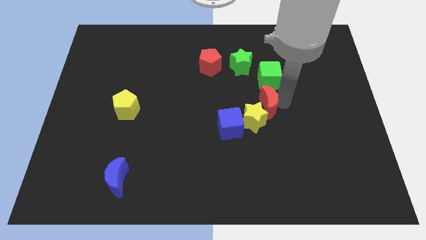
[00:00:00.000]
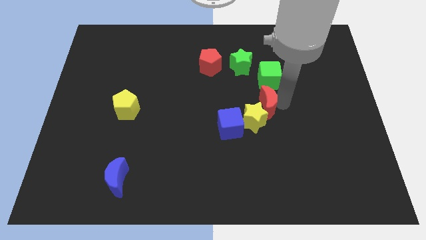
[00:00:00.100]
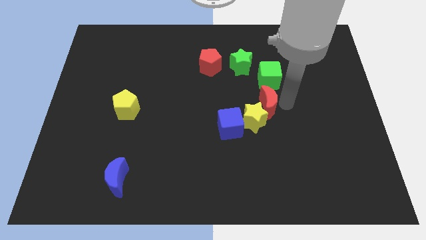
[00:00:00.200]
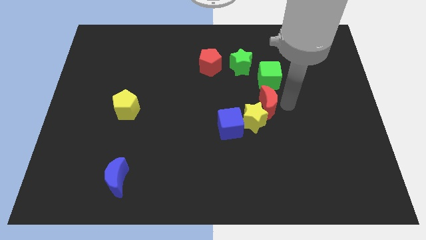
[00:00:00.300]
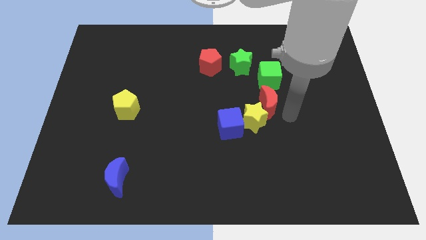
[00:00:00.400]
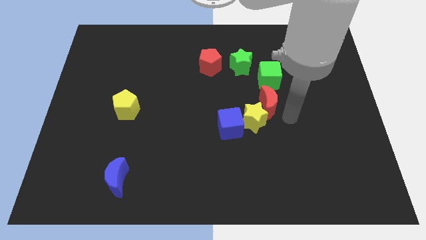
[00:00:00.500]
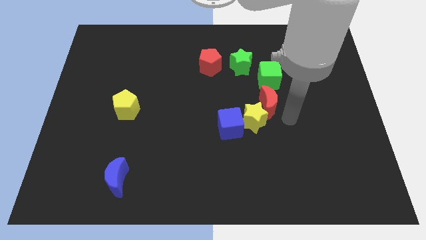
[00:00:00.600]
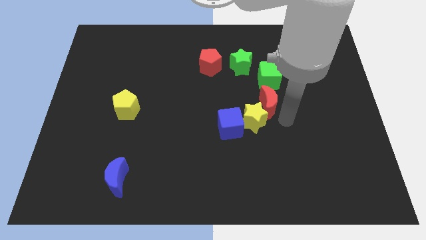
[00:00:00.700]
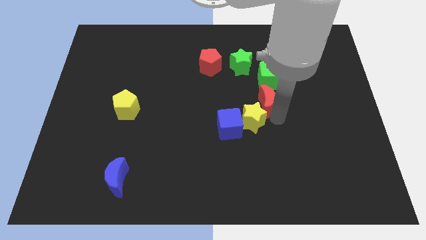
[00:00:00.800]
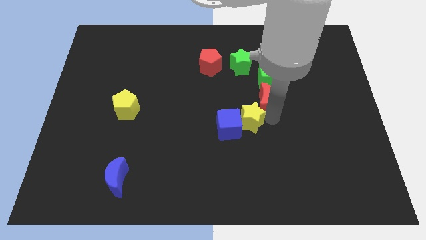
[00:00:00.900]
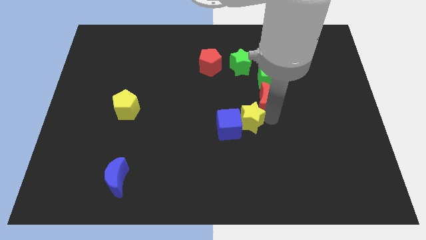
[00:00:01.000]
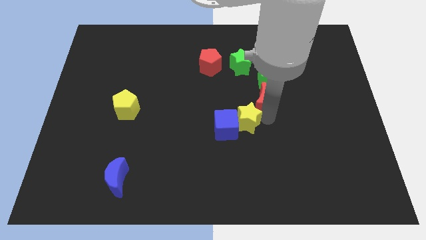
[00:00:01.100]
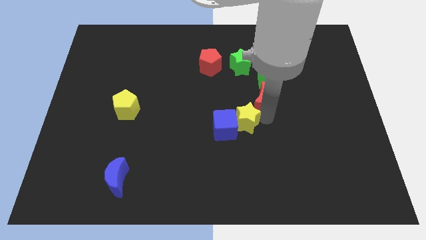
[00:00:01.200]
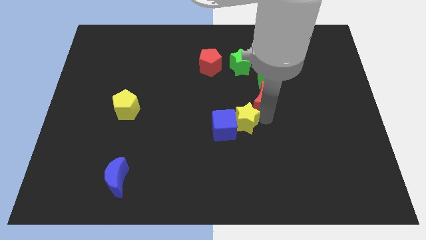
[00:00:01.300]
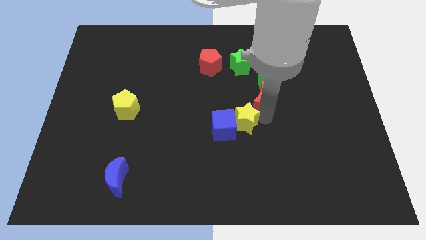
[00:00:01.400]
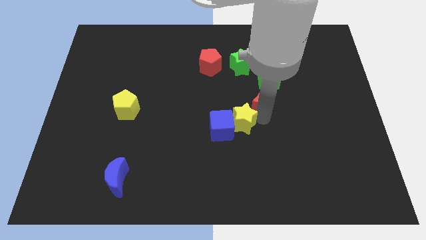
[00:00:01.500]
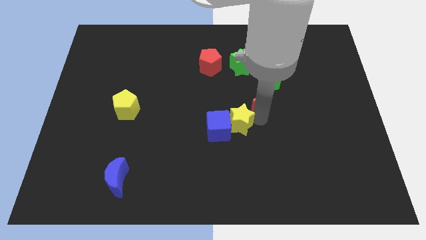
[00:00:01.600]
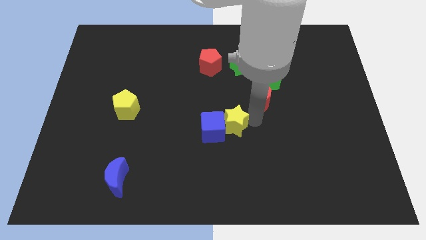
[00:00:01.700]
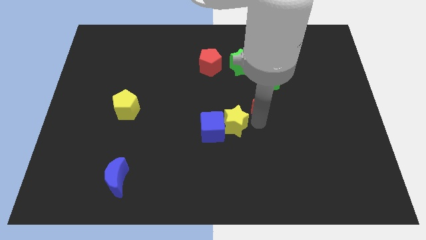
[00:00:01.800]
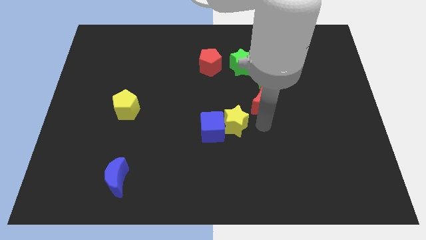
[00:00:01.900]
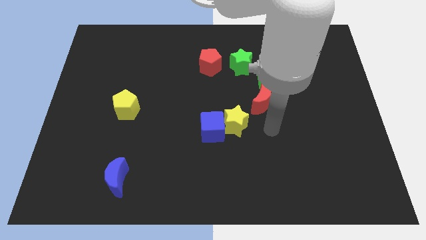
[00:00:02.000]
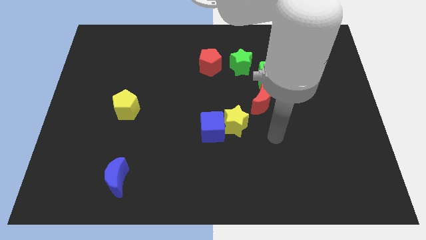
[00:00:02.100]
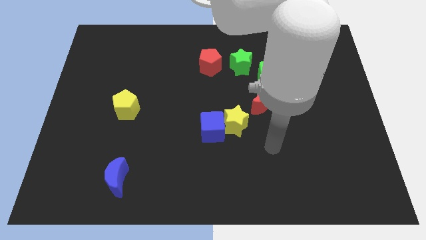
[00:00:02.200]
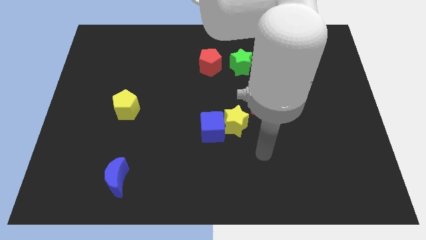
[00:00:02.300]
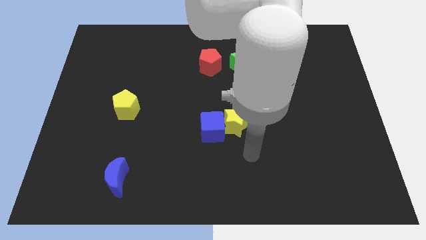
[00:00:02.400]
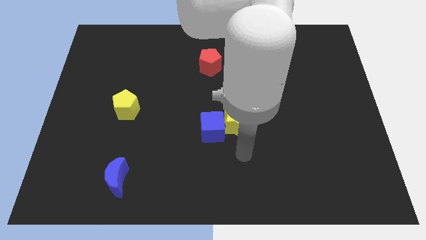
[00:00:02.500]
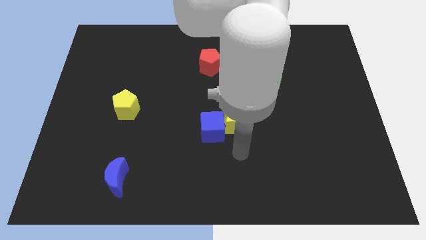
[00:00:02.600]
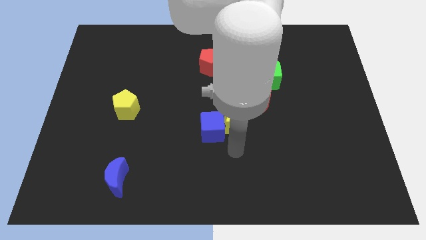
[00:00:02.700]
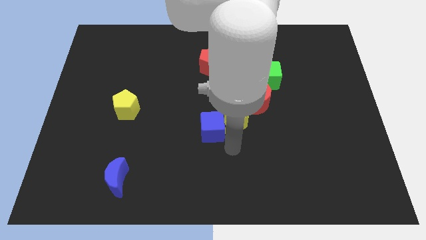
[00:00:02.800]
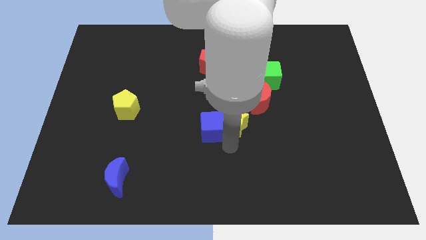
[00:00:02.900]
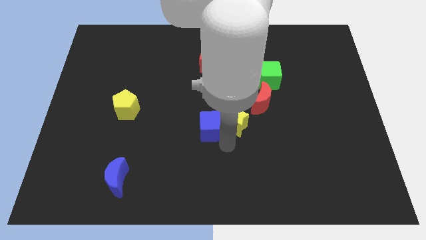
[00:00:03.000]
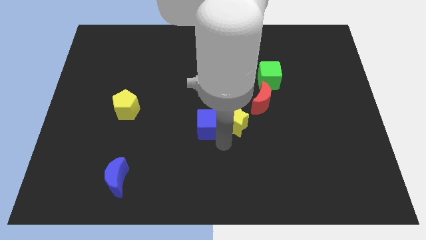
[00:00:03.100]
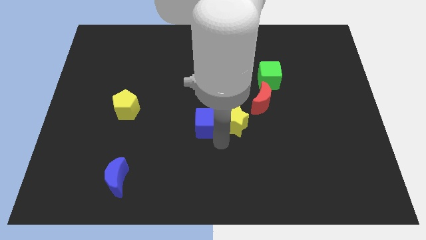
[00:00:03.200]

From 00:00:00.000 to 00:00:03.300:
separate yellow star from red moon

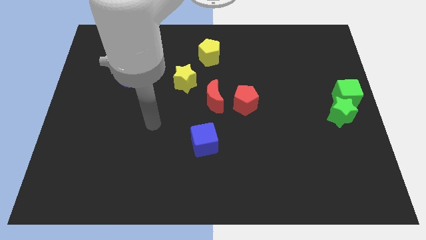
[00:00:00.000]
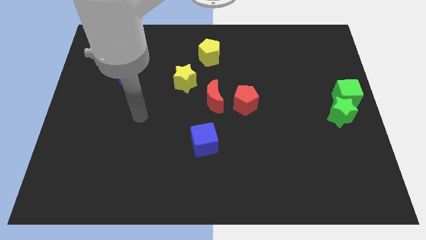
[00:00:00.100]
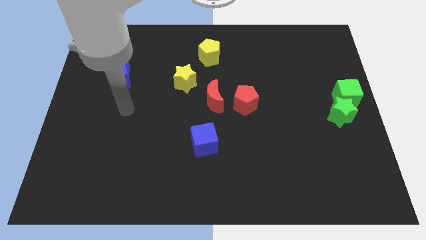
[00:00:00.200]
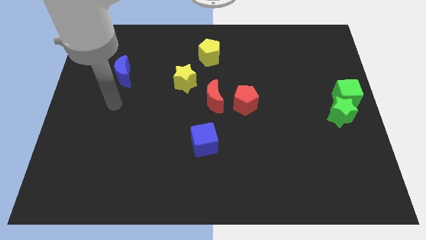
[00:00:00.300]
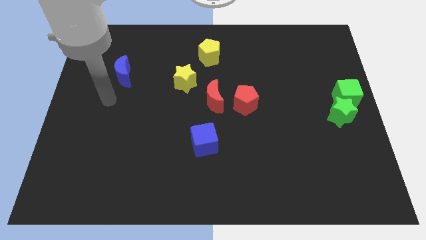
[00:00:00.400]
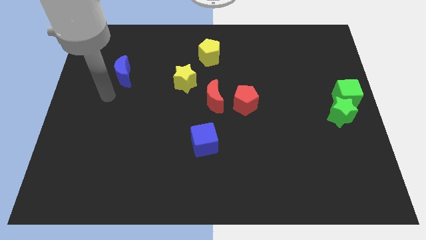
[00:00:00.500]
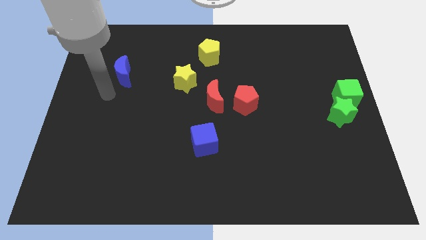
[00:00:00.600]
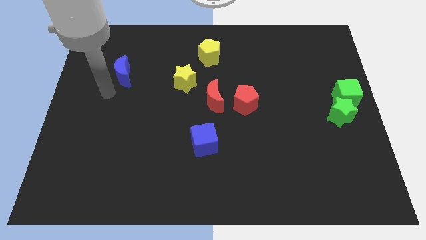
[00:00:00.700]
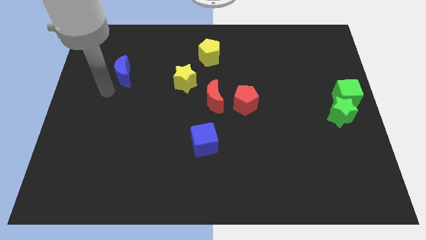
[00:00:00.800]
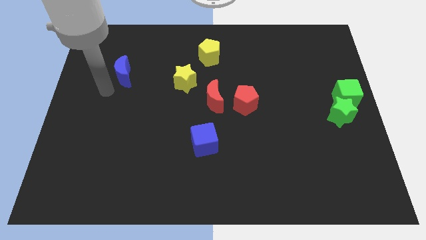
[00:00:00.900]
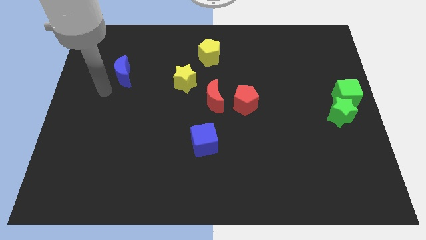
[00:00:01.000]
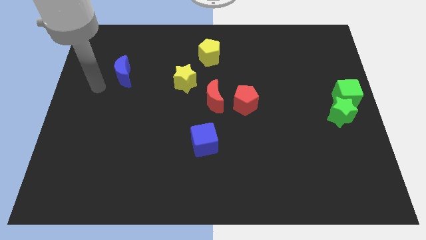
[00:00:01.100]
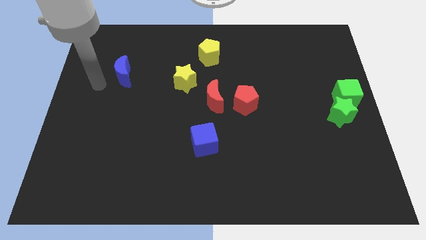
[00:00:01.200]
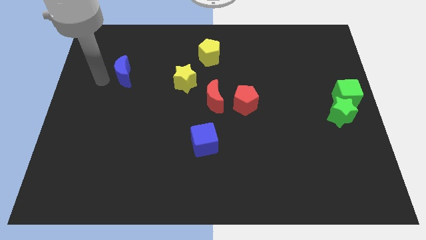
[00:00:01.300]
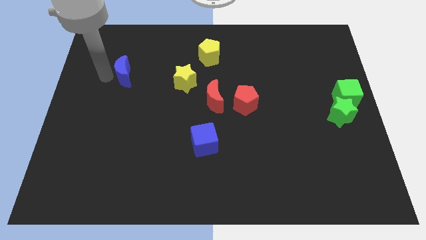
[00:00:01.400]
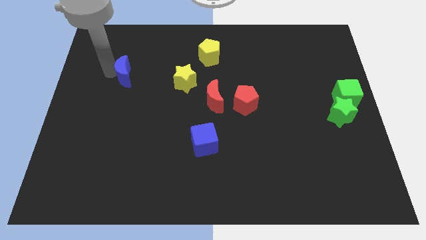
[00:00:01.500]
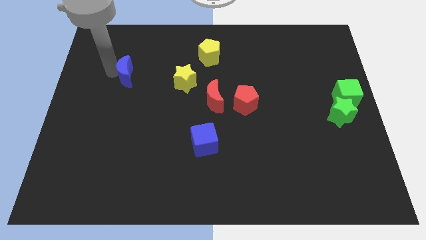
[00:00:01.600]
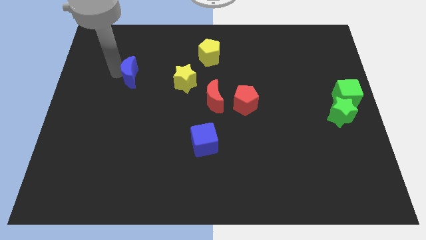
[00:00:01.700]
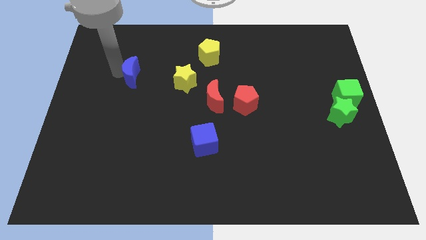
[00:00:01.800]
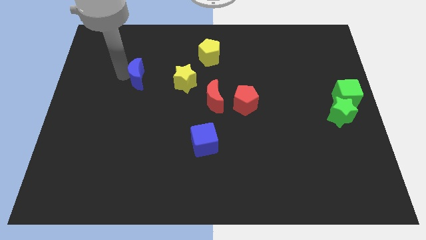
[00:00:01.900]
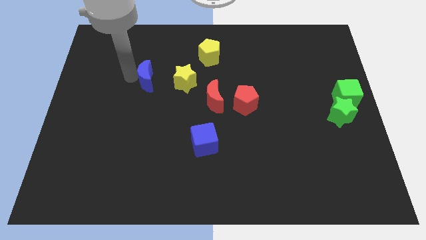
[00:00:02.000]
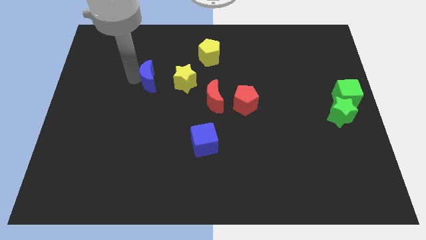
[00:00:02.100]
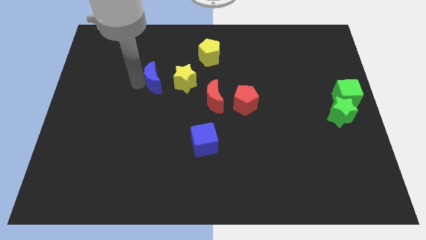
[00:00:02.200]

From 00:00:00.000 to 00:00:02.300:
push the blue crescent towards the yellow star

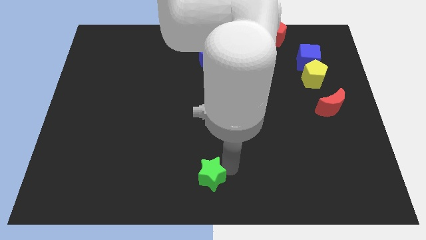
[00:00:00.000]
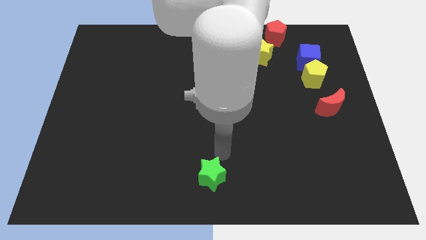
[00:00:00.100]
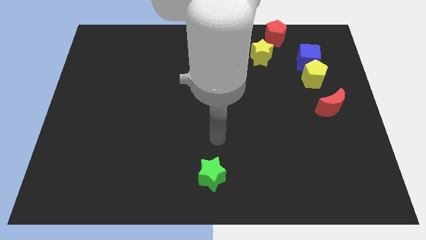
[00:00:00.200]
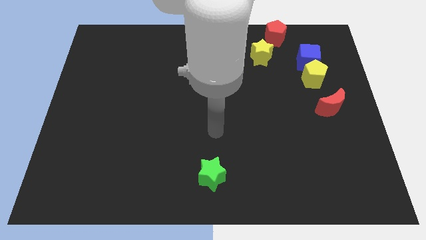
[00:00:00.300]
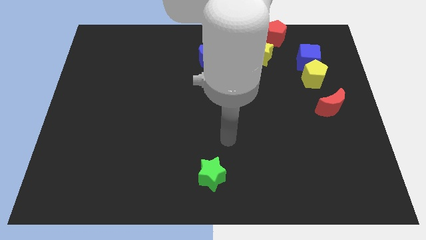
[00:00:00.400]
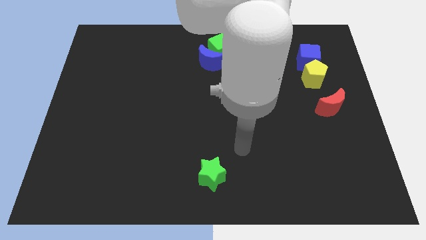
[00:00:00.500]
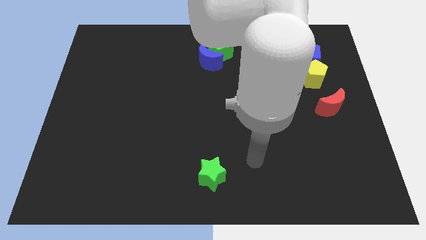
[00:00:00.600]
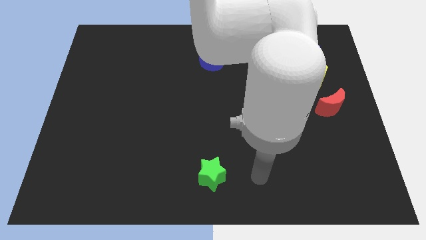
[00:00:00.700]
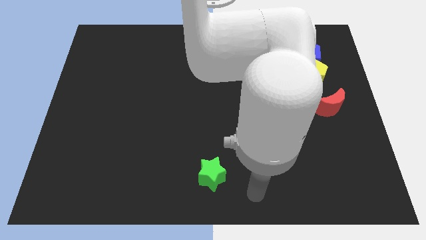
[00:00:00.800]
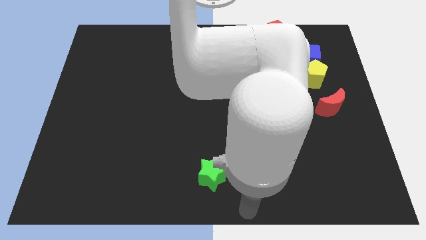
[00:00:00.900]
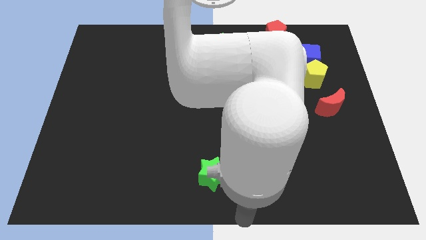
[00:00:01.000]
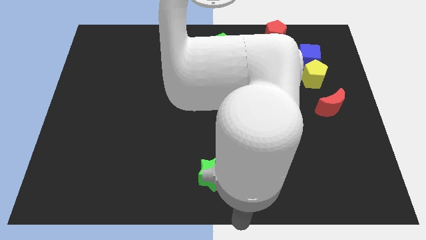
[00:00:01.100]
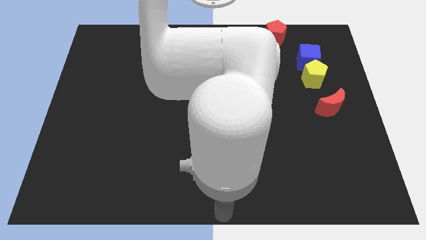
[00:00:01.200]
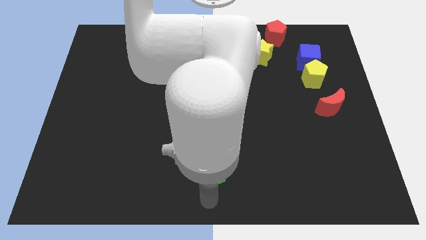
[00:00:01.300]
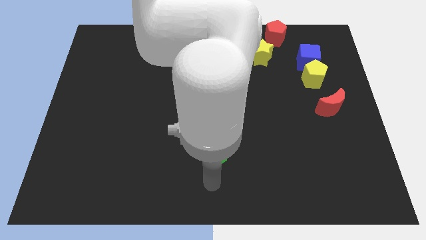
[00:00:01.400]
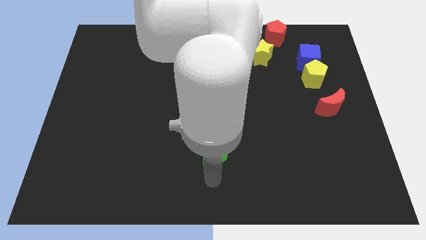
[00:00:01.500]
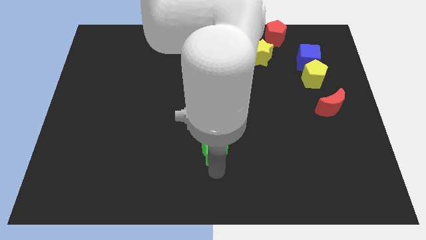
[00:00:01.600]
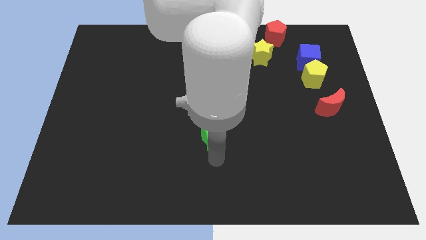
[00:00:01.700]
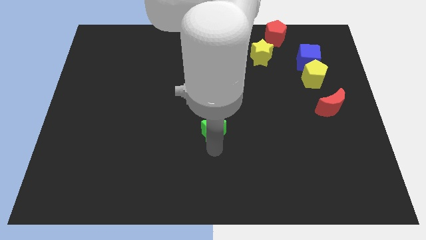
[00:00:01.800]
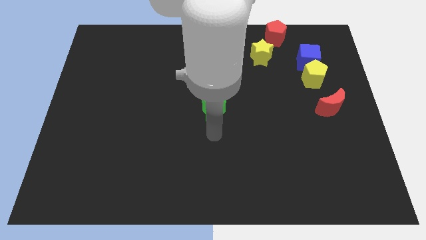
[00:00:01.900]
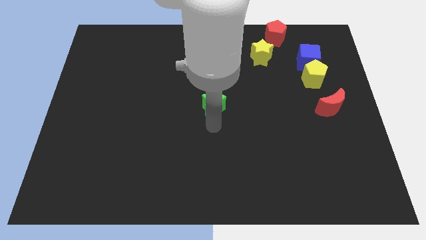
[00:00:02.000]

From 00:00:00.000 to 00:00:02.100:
slide the green star to the center of the board

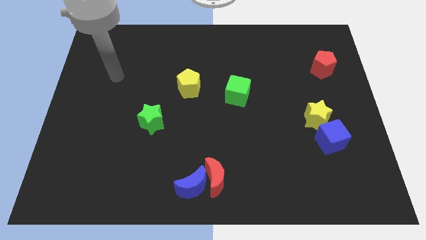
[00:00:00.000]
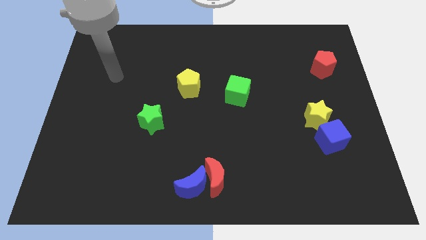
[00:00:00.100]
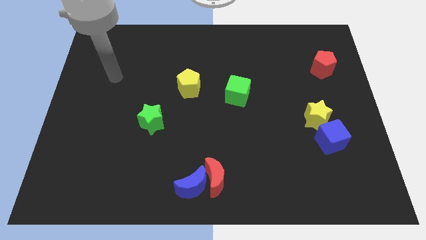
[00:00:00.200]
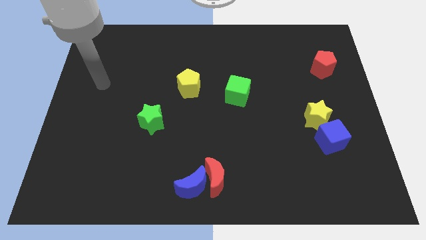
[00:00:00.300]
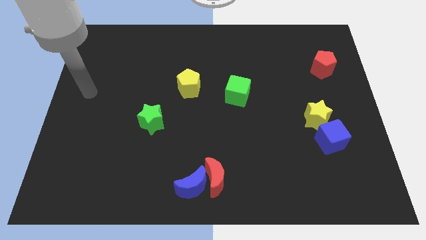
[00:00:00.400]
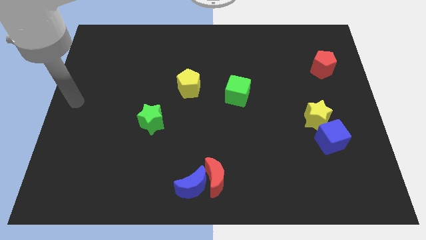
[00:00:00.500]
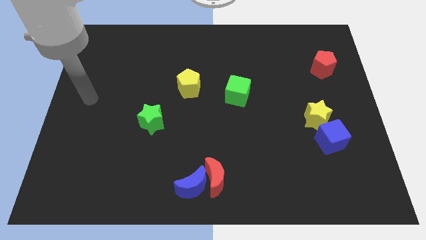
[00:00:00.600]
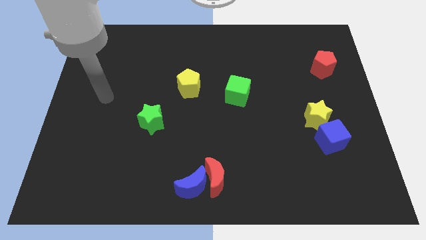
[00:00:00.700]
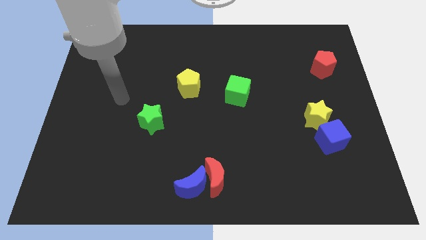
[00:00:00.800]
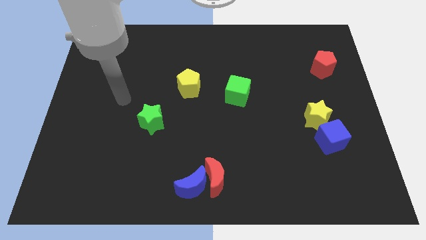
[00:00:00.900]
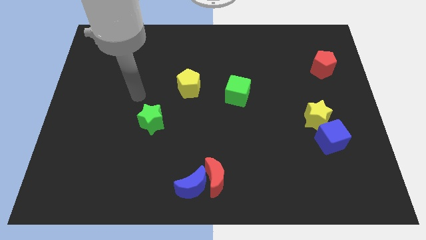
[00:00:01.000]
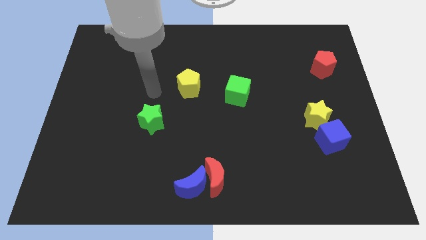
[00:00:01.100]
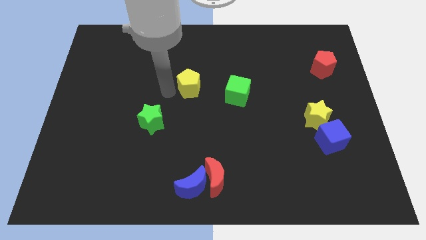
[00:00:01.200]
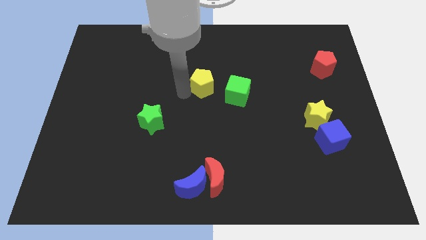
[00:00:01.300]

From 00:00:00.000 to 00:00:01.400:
move your arm towards the yellow pentagon
